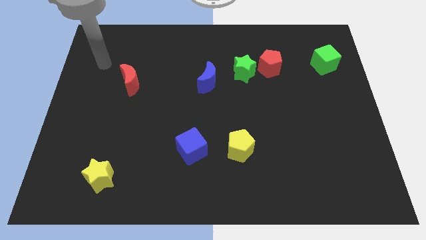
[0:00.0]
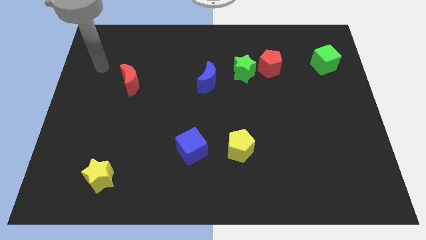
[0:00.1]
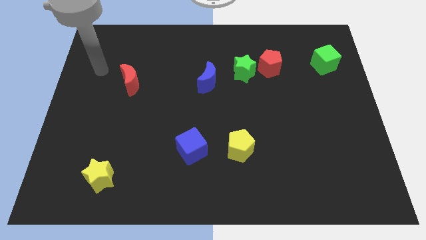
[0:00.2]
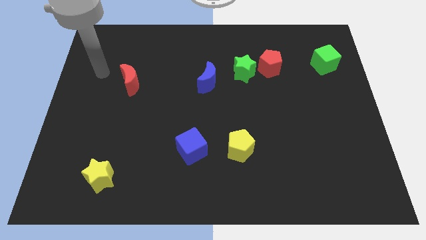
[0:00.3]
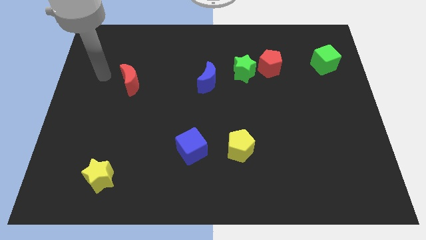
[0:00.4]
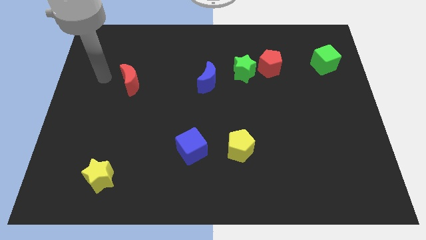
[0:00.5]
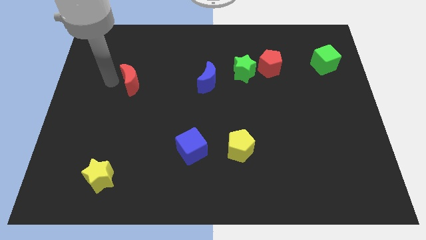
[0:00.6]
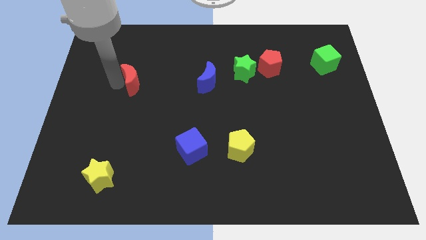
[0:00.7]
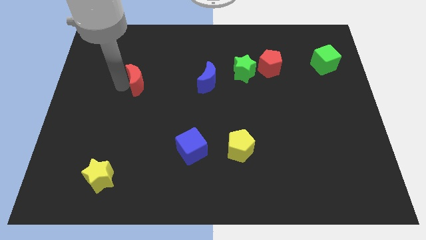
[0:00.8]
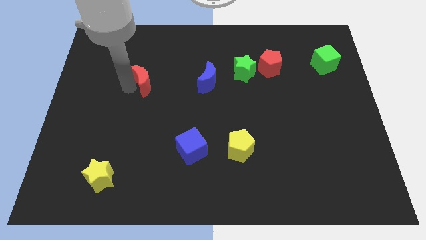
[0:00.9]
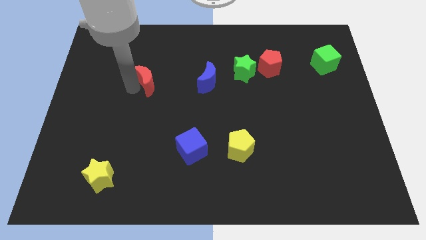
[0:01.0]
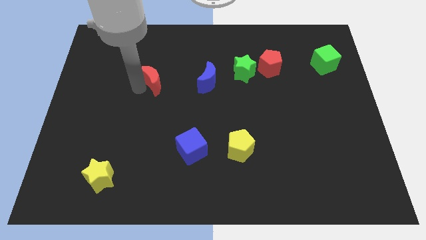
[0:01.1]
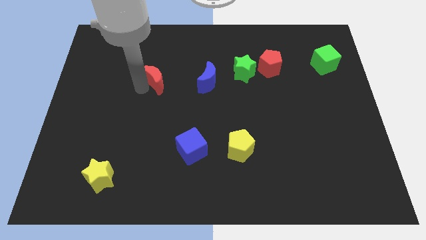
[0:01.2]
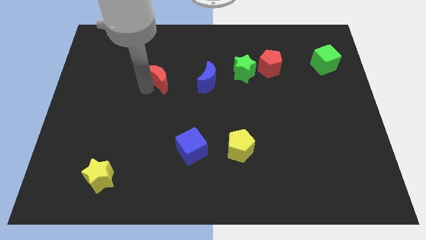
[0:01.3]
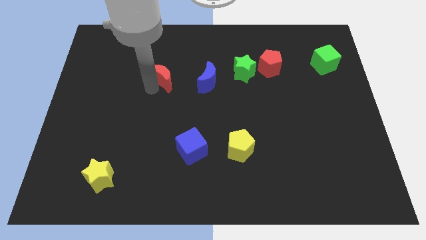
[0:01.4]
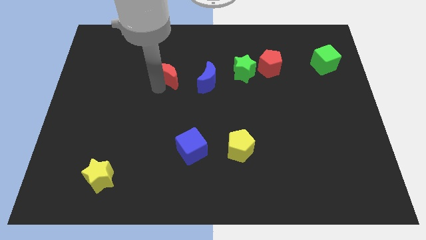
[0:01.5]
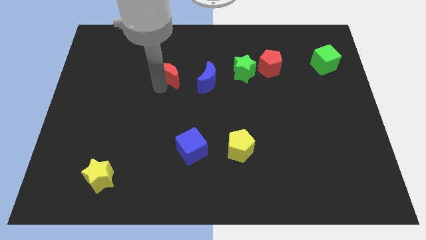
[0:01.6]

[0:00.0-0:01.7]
push the red moon closer to the blue moon

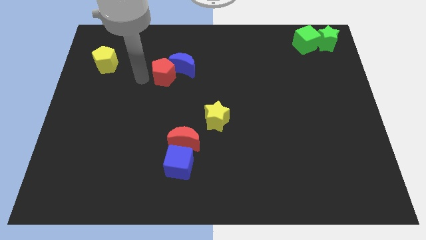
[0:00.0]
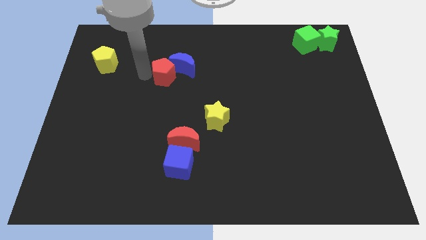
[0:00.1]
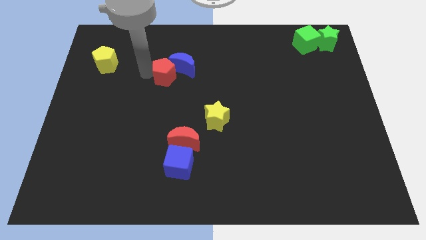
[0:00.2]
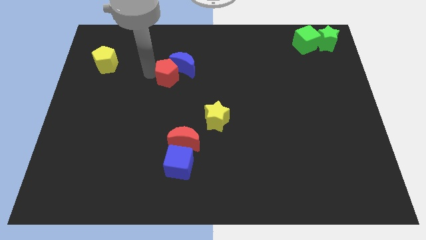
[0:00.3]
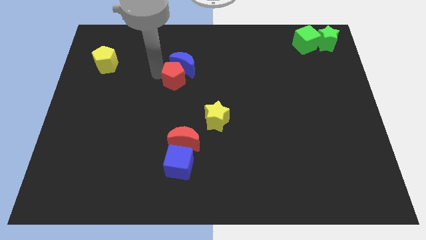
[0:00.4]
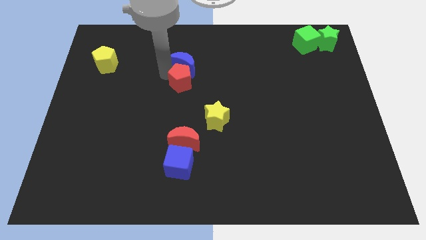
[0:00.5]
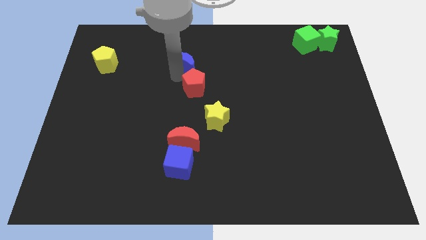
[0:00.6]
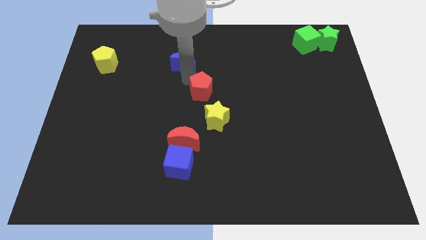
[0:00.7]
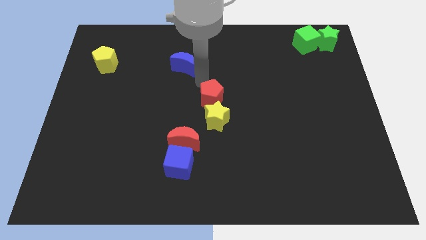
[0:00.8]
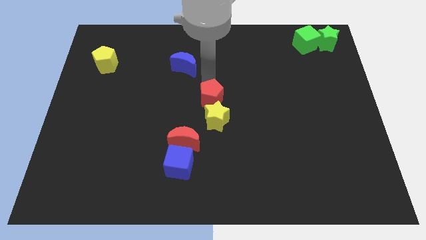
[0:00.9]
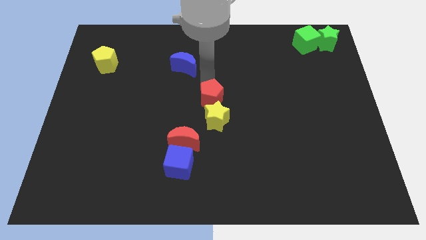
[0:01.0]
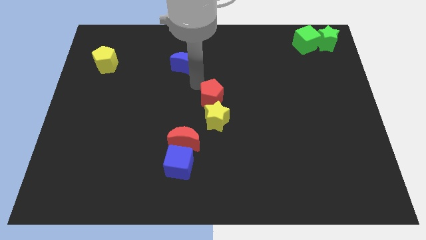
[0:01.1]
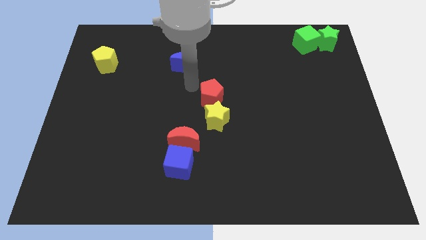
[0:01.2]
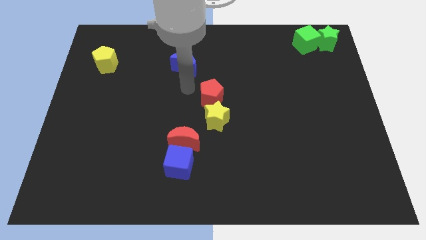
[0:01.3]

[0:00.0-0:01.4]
move the red pentagon to the top of the yellow star

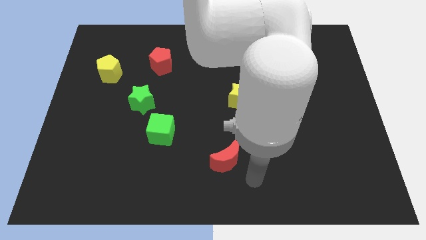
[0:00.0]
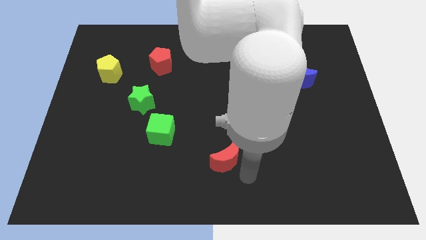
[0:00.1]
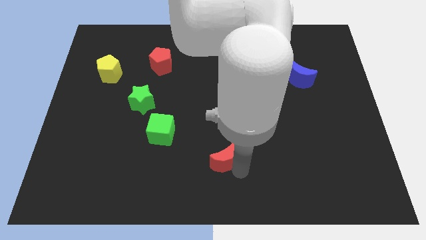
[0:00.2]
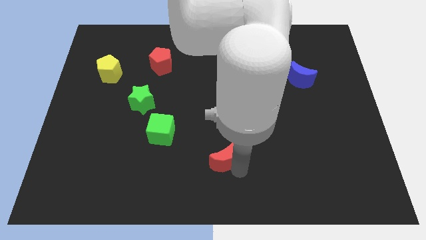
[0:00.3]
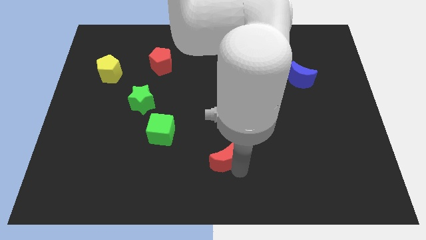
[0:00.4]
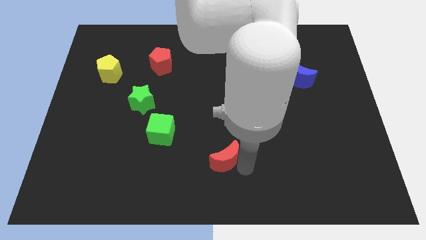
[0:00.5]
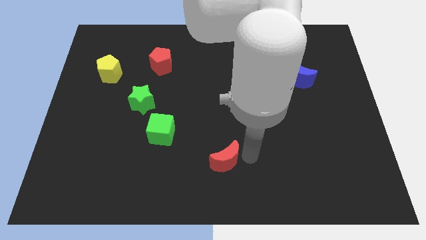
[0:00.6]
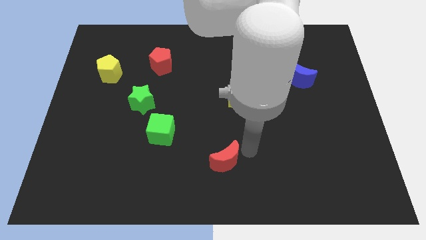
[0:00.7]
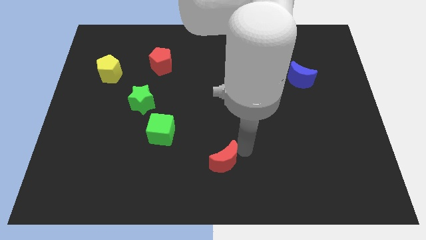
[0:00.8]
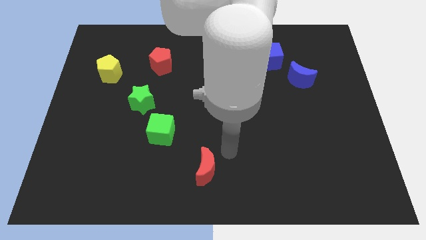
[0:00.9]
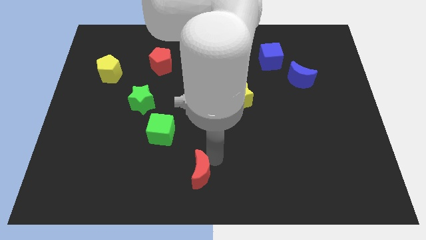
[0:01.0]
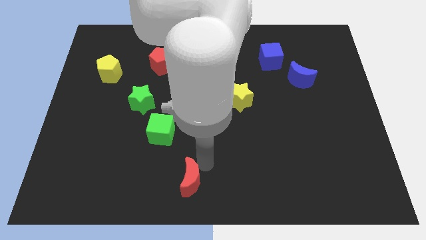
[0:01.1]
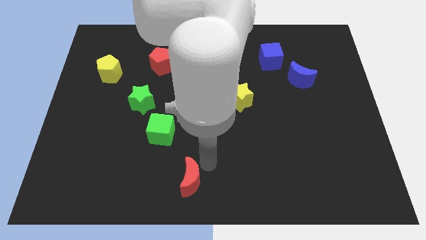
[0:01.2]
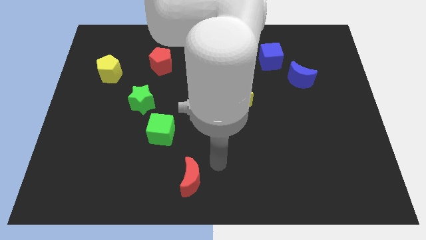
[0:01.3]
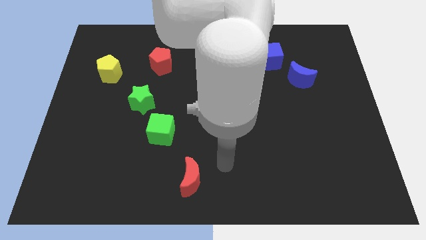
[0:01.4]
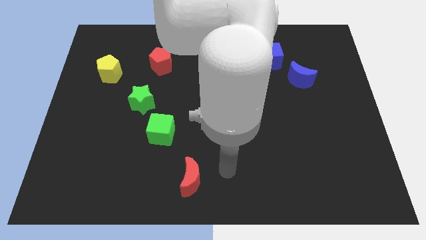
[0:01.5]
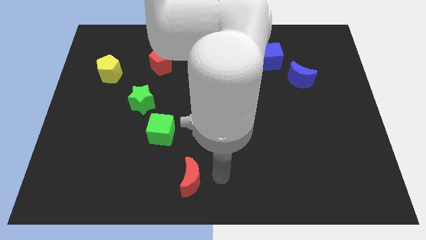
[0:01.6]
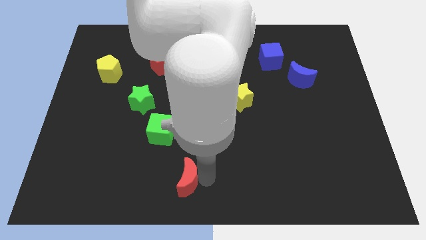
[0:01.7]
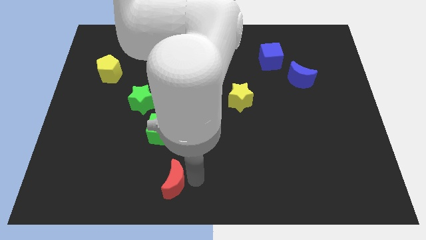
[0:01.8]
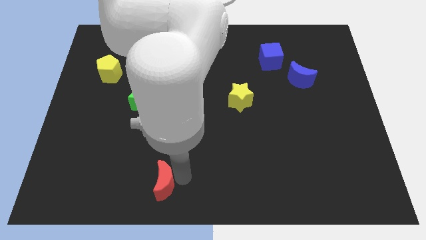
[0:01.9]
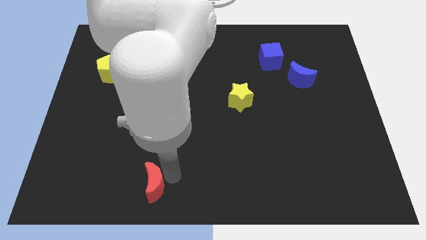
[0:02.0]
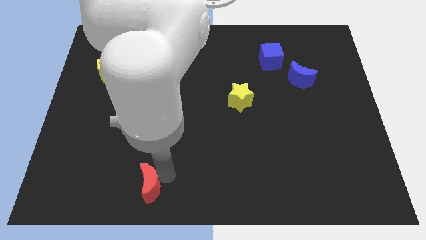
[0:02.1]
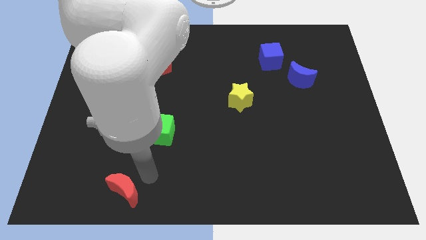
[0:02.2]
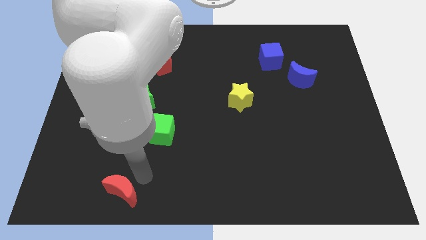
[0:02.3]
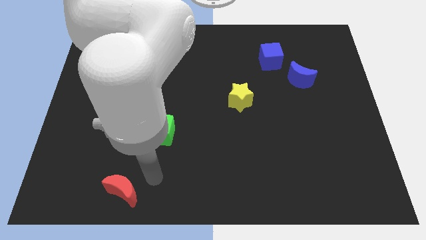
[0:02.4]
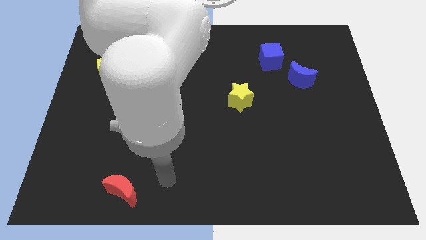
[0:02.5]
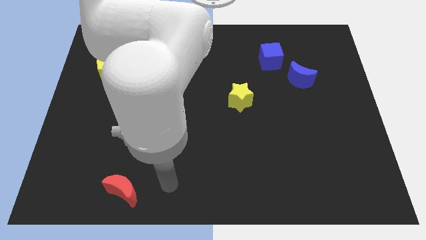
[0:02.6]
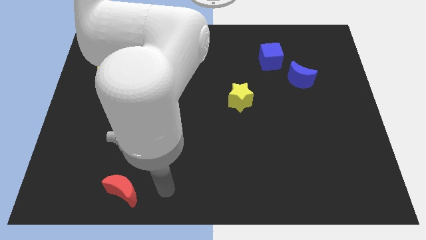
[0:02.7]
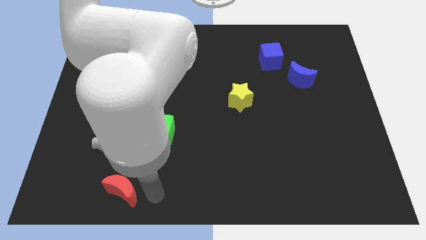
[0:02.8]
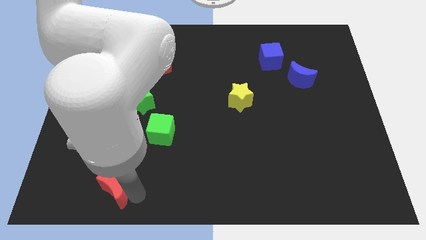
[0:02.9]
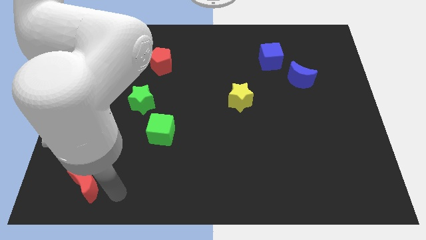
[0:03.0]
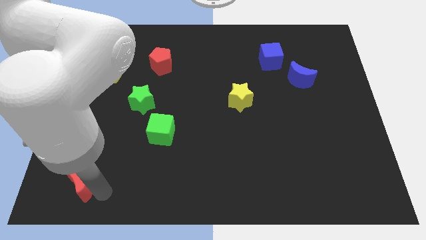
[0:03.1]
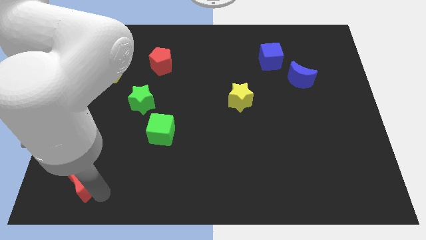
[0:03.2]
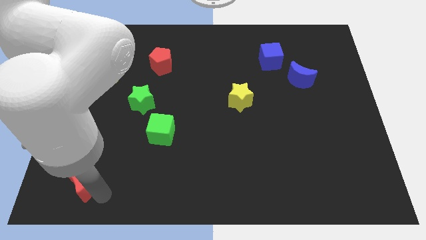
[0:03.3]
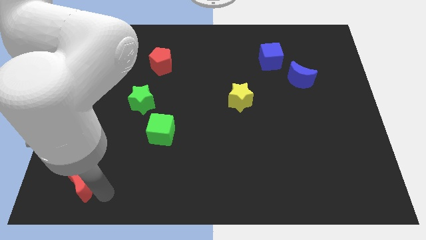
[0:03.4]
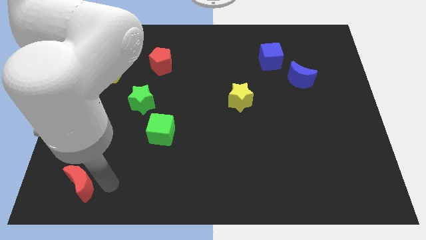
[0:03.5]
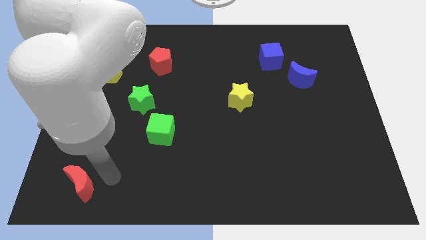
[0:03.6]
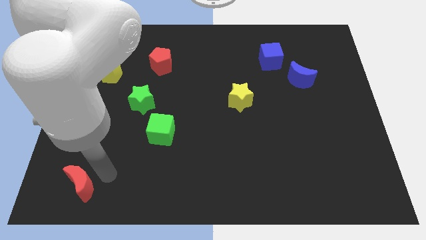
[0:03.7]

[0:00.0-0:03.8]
move the red moon diagonal left below green cube

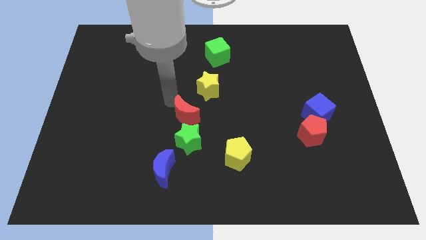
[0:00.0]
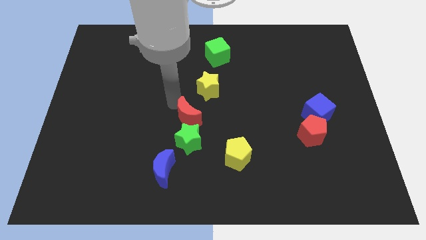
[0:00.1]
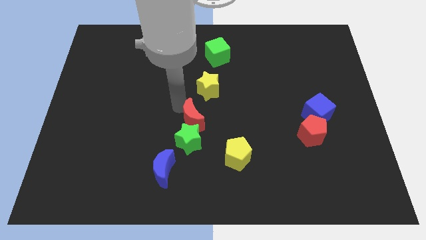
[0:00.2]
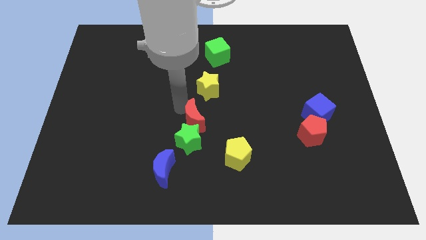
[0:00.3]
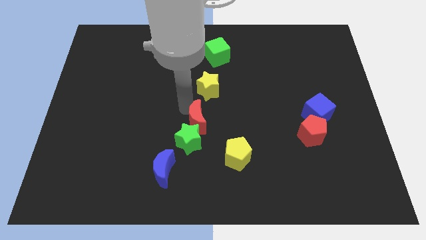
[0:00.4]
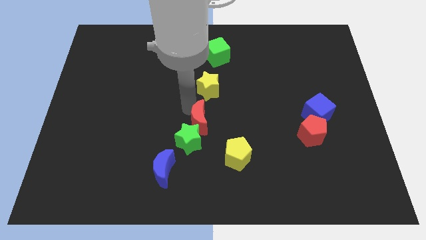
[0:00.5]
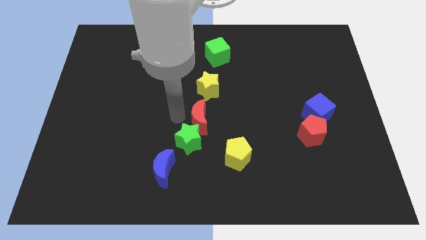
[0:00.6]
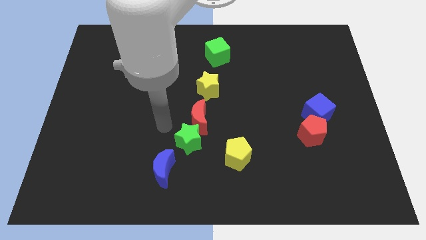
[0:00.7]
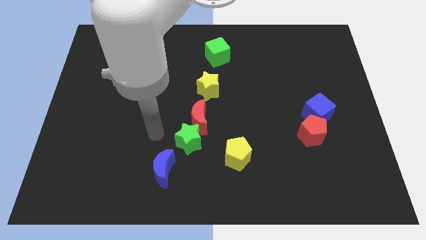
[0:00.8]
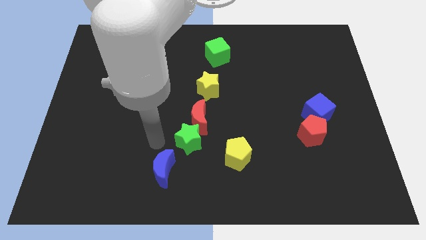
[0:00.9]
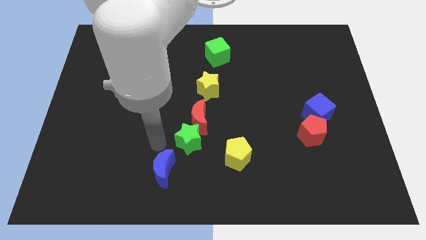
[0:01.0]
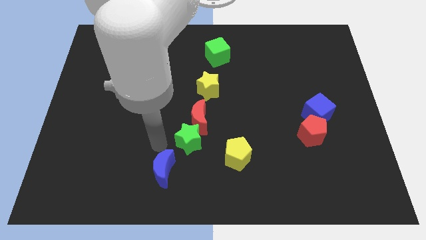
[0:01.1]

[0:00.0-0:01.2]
push the red crescent below the yellow star vertically

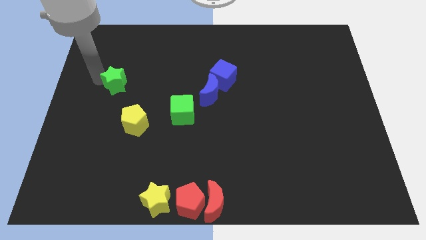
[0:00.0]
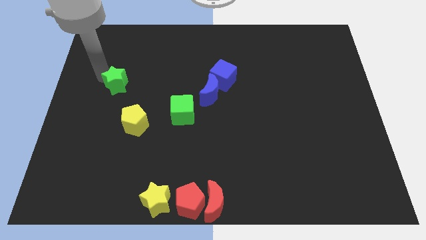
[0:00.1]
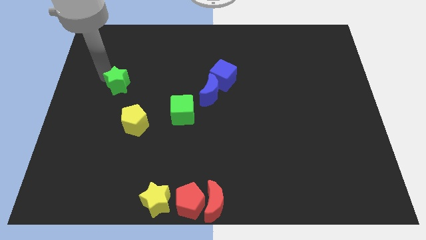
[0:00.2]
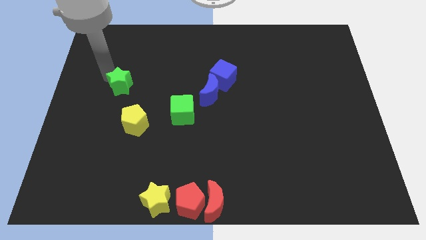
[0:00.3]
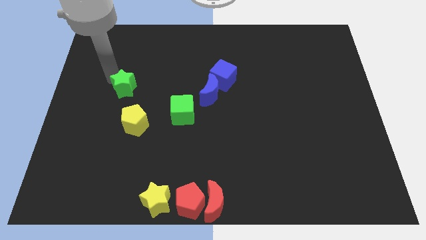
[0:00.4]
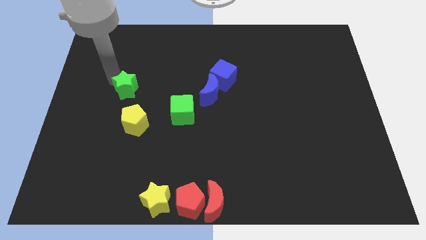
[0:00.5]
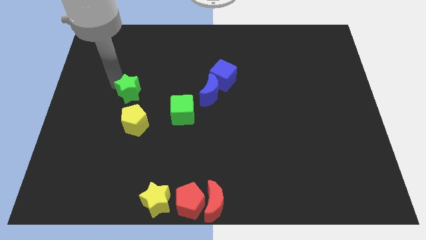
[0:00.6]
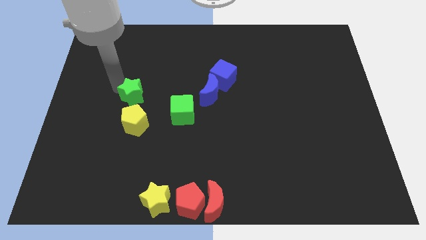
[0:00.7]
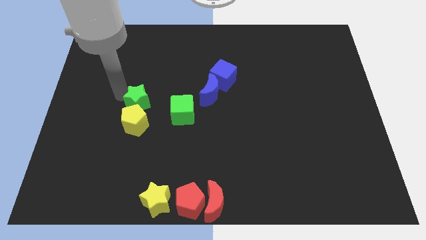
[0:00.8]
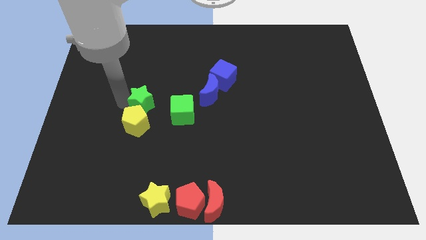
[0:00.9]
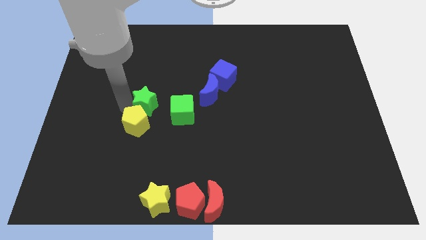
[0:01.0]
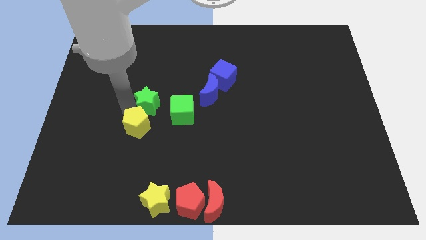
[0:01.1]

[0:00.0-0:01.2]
move the green star into the yellow pentagon
